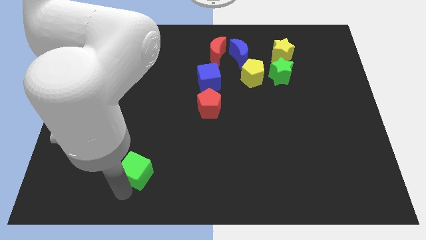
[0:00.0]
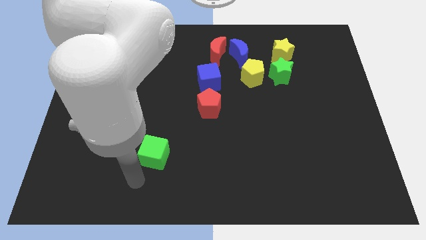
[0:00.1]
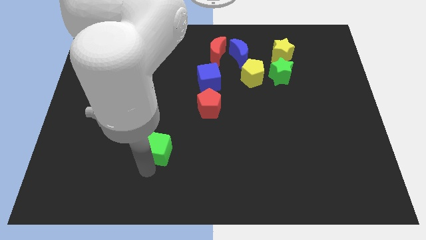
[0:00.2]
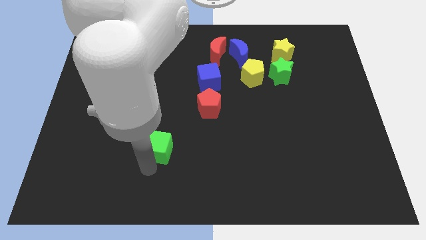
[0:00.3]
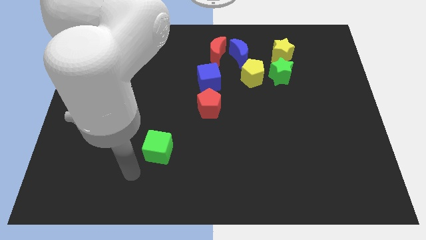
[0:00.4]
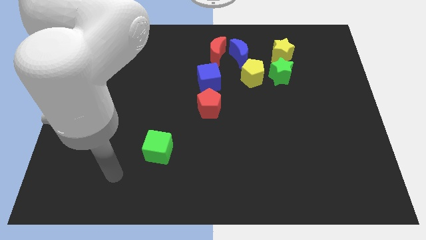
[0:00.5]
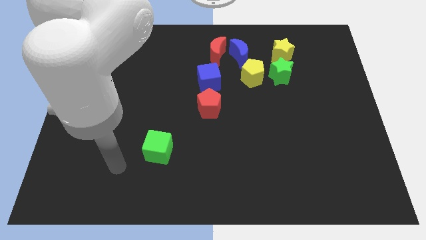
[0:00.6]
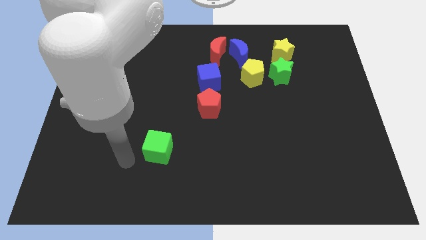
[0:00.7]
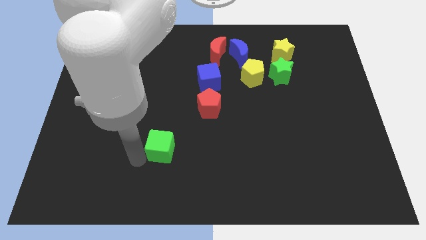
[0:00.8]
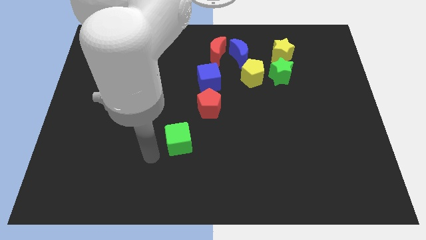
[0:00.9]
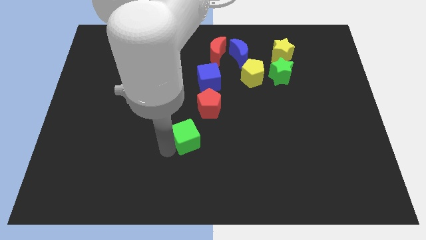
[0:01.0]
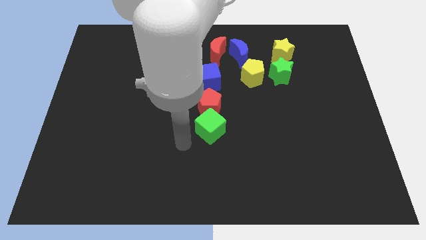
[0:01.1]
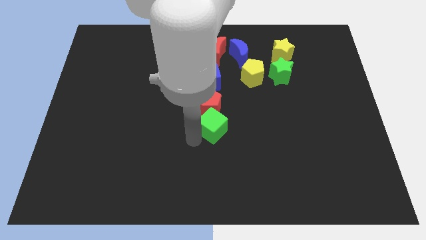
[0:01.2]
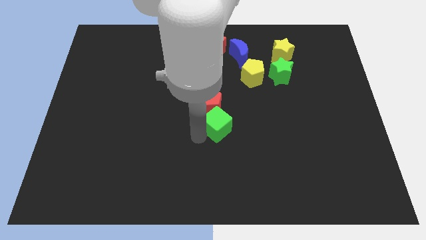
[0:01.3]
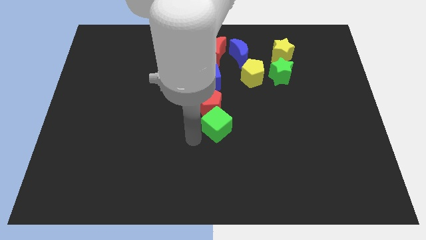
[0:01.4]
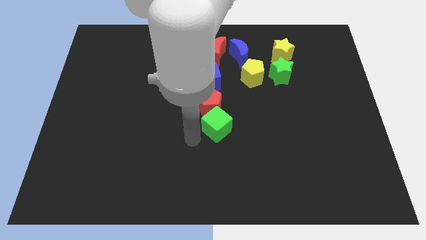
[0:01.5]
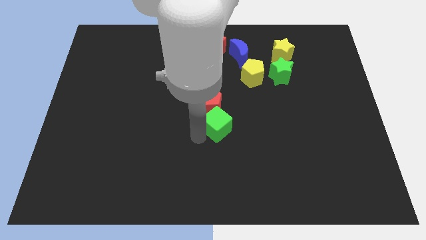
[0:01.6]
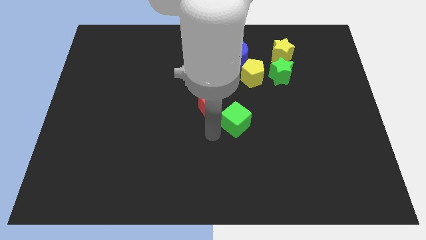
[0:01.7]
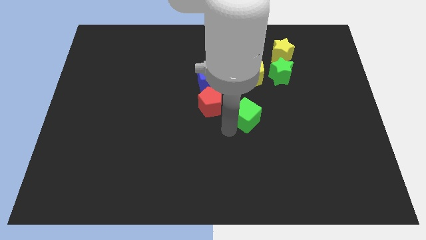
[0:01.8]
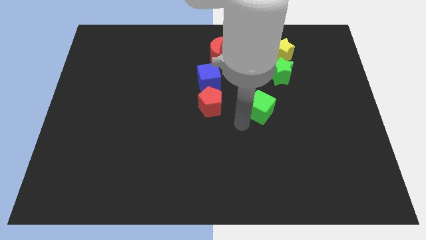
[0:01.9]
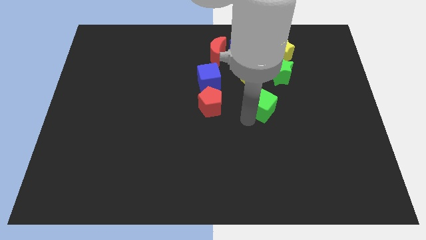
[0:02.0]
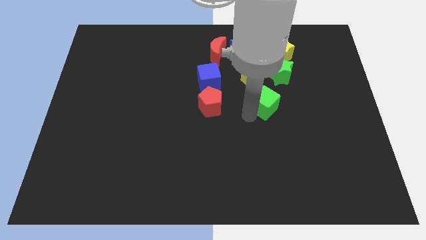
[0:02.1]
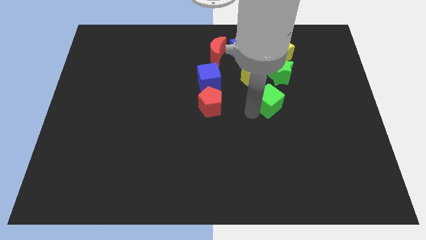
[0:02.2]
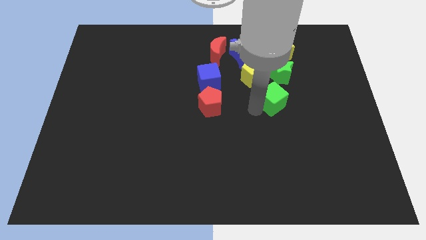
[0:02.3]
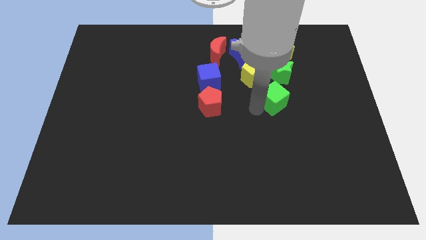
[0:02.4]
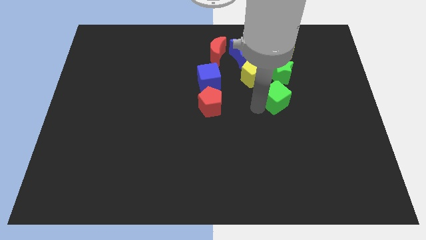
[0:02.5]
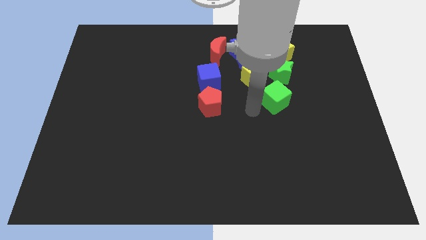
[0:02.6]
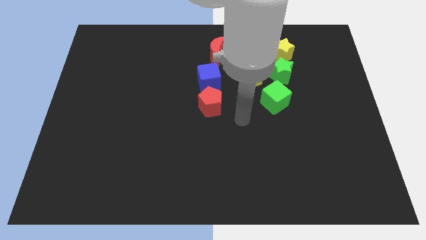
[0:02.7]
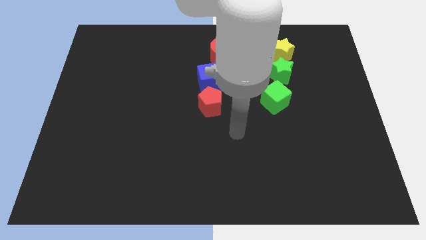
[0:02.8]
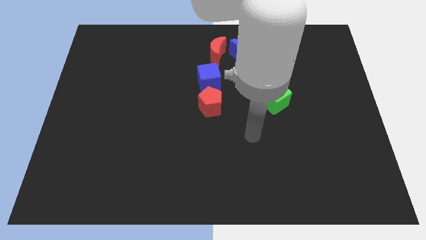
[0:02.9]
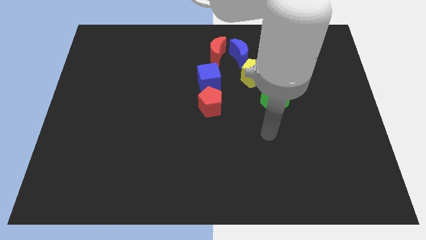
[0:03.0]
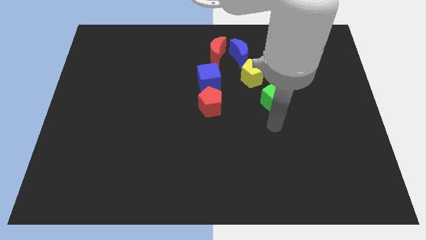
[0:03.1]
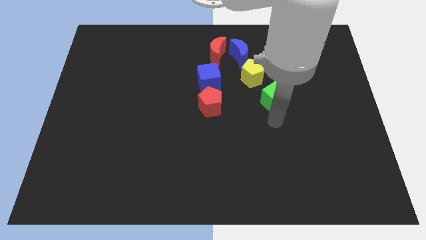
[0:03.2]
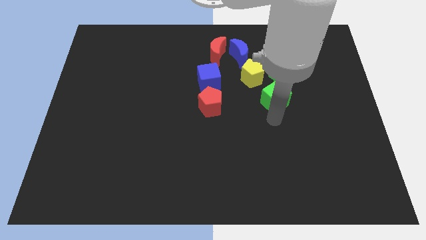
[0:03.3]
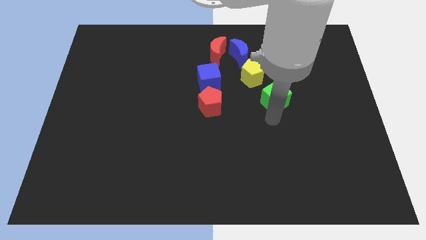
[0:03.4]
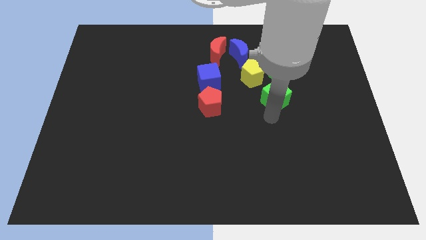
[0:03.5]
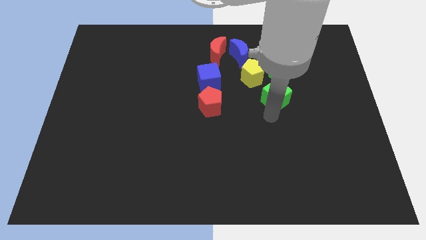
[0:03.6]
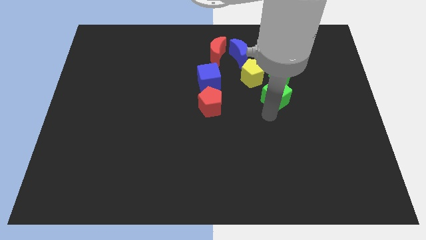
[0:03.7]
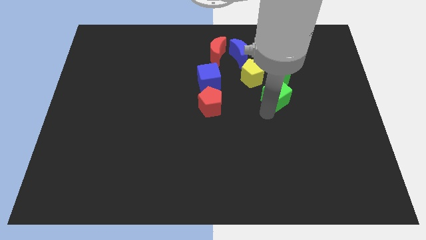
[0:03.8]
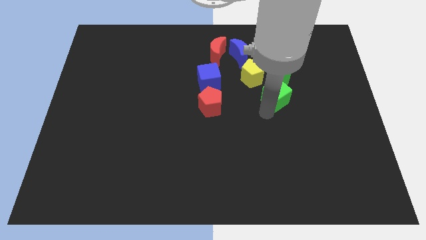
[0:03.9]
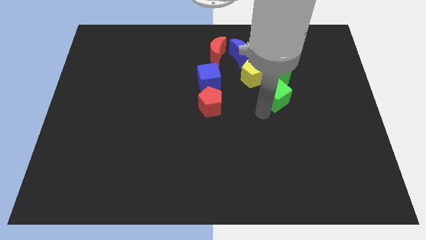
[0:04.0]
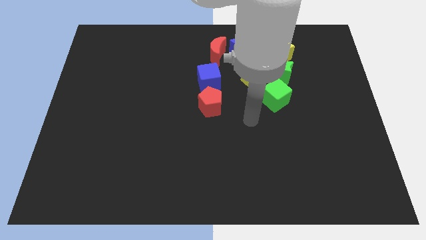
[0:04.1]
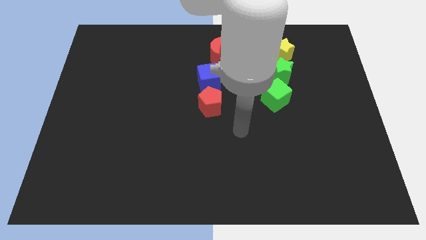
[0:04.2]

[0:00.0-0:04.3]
move the green cube below the green star

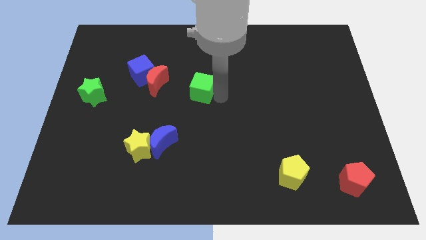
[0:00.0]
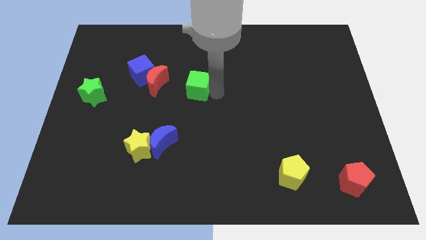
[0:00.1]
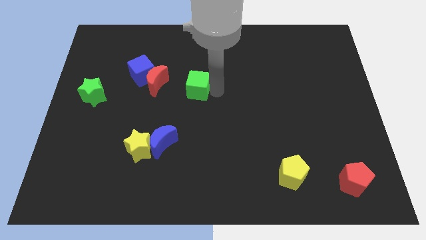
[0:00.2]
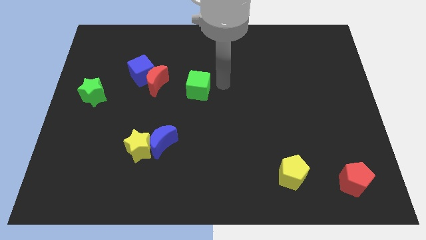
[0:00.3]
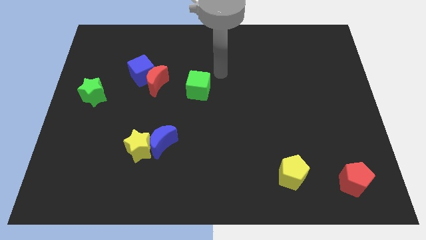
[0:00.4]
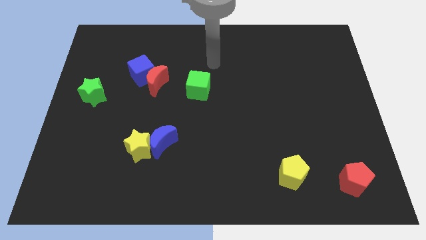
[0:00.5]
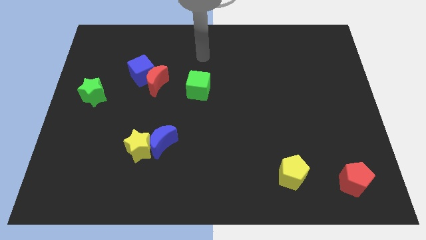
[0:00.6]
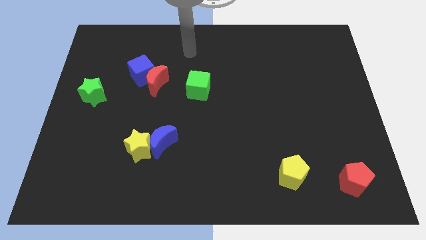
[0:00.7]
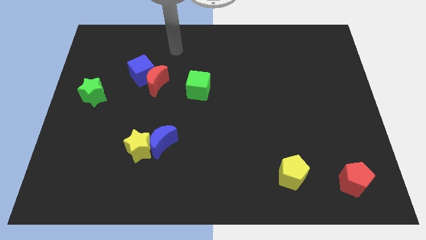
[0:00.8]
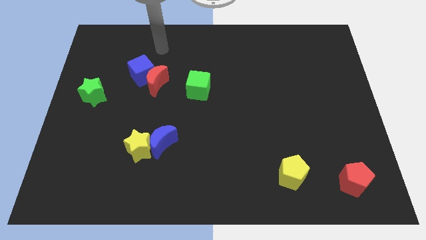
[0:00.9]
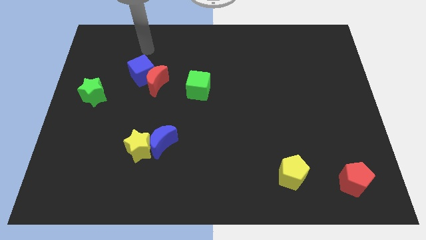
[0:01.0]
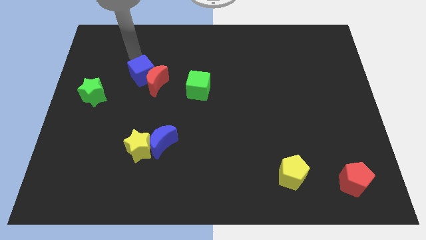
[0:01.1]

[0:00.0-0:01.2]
point your arm at the top of blue cube

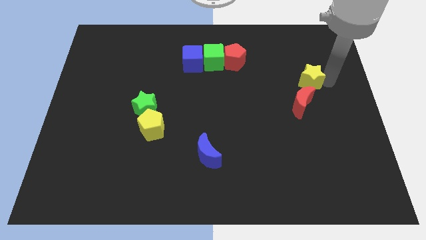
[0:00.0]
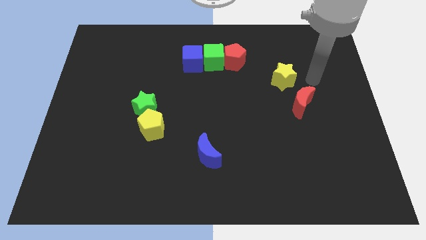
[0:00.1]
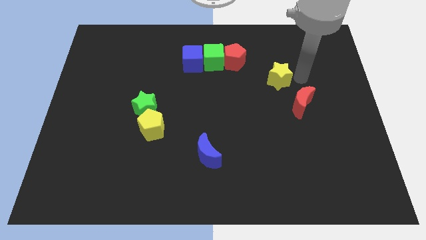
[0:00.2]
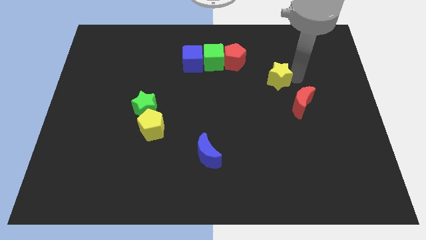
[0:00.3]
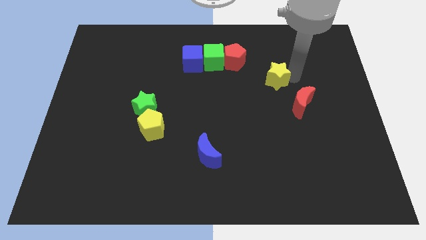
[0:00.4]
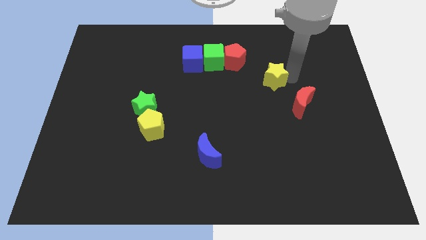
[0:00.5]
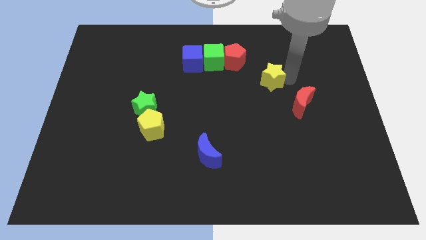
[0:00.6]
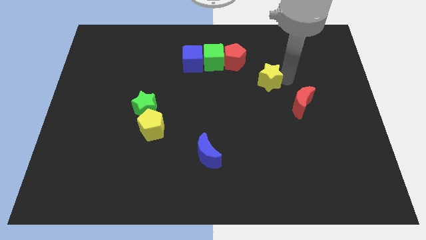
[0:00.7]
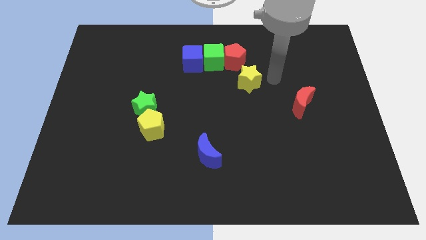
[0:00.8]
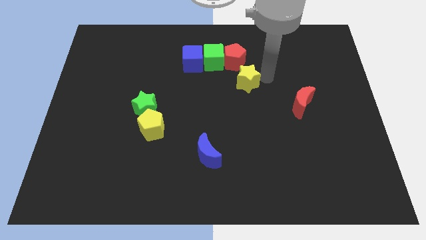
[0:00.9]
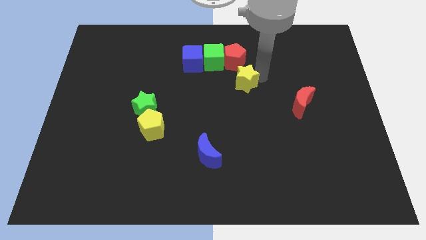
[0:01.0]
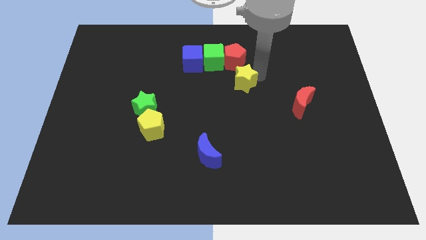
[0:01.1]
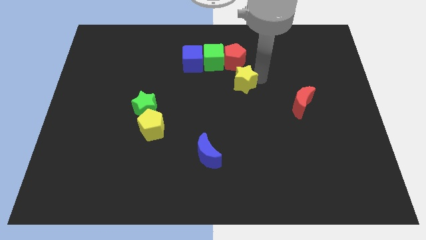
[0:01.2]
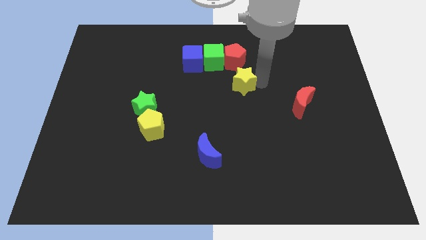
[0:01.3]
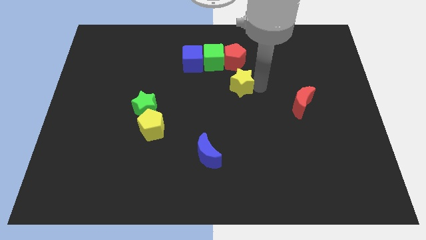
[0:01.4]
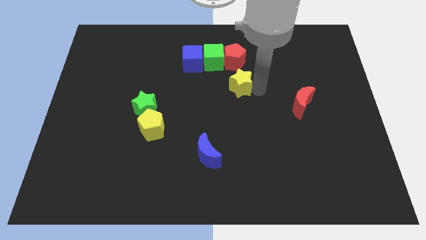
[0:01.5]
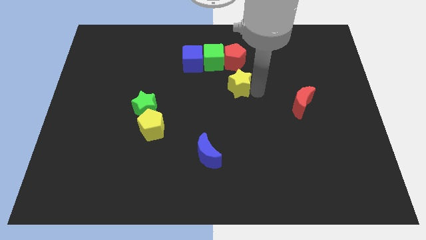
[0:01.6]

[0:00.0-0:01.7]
move the yellow star to the bottom side of the red pentagon

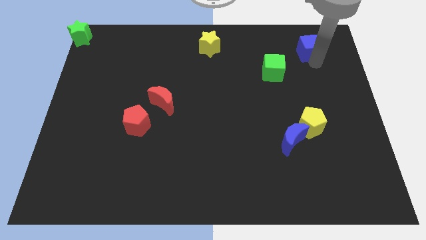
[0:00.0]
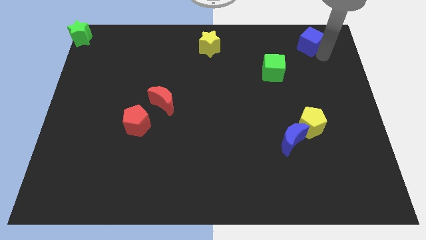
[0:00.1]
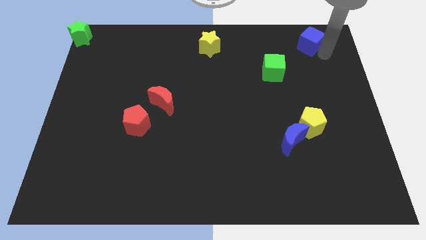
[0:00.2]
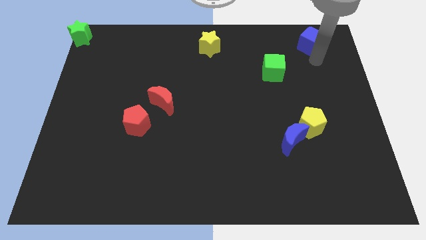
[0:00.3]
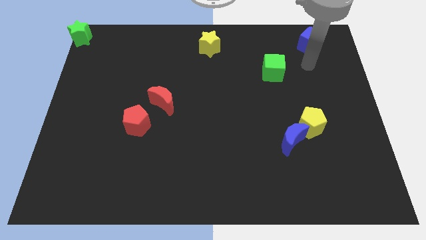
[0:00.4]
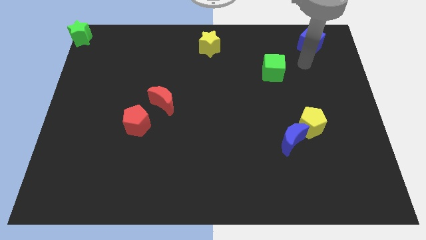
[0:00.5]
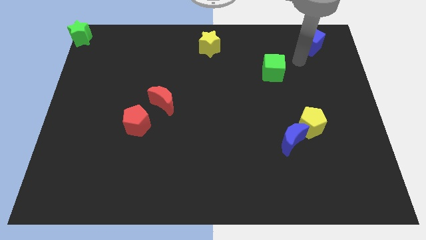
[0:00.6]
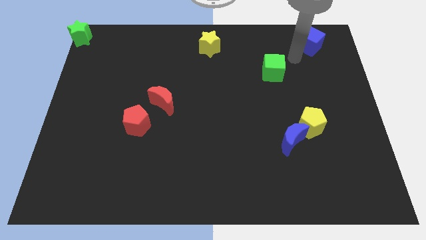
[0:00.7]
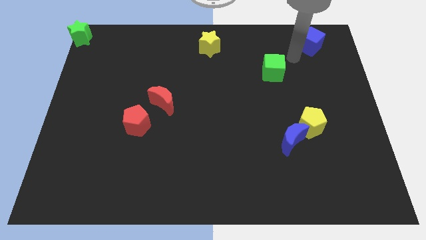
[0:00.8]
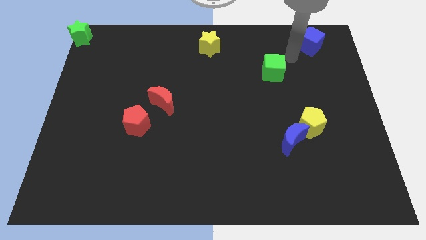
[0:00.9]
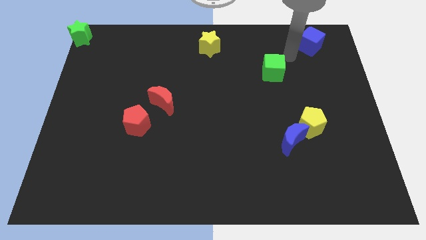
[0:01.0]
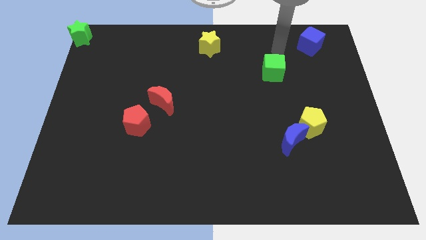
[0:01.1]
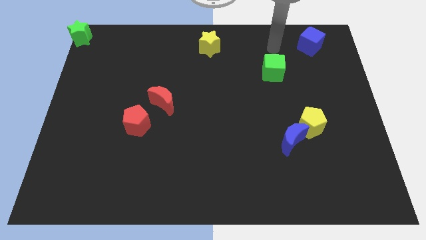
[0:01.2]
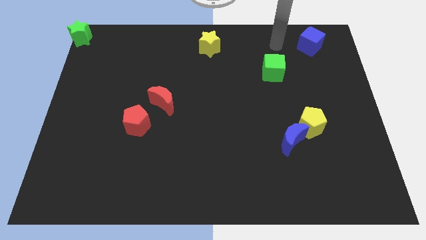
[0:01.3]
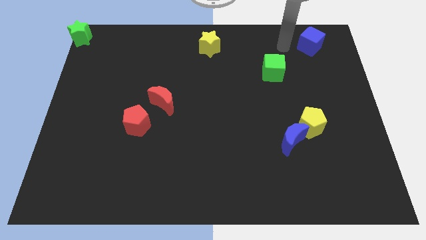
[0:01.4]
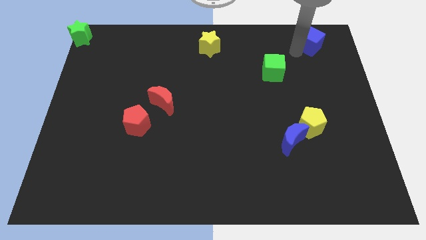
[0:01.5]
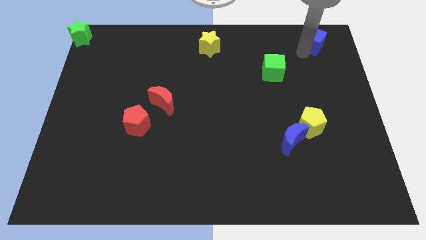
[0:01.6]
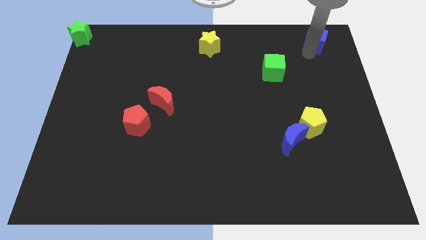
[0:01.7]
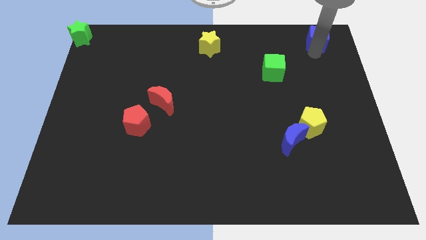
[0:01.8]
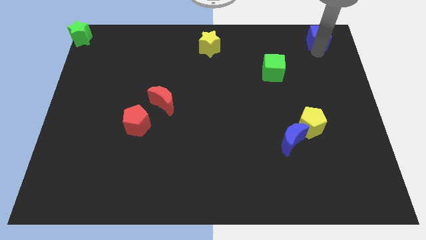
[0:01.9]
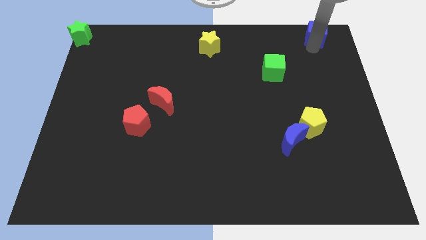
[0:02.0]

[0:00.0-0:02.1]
push the blue cube towards top right corner of the board
